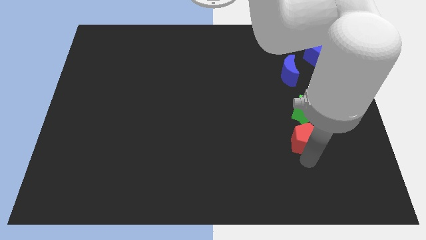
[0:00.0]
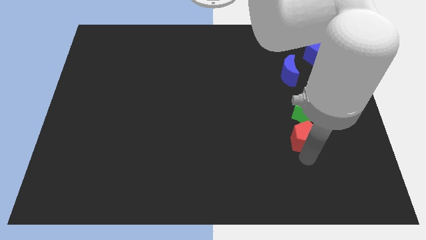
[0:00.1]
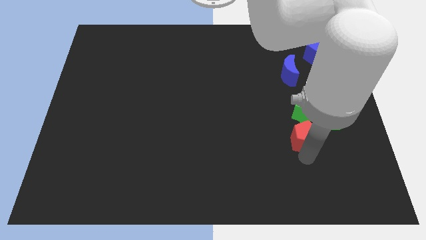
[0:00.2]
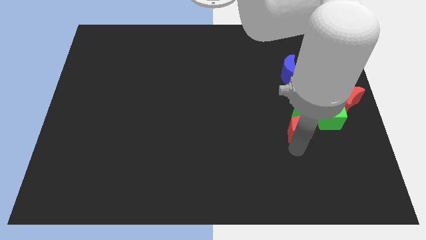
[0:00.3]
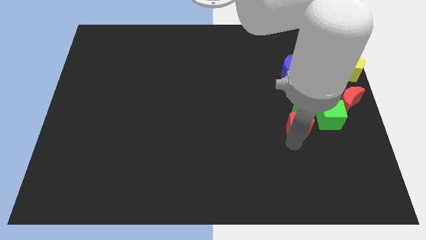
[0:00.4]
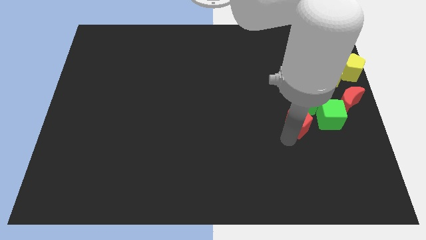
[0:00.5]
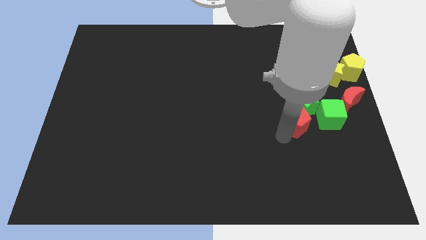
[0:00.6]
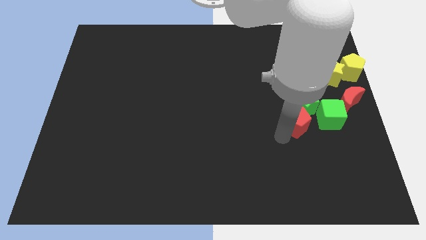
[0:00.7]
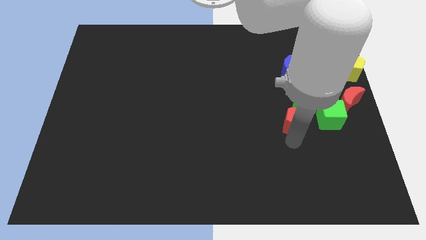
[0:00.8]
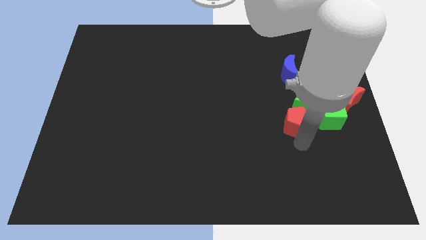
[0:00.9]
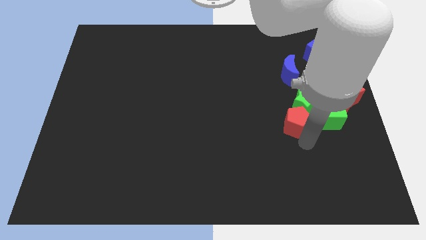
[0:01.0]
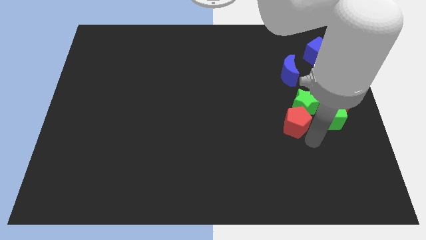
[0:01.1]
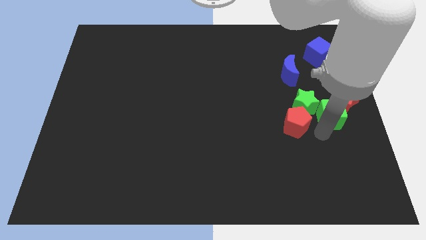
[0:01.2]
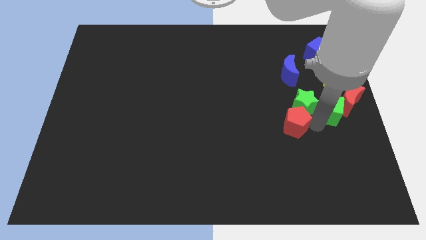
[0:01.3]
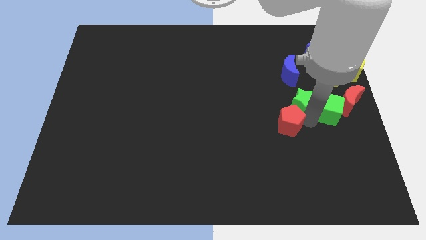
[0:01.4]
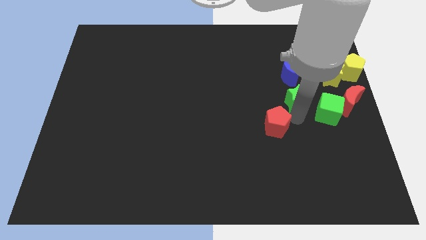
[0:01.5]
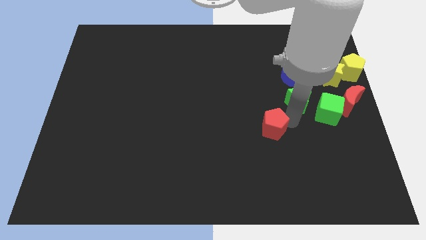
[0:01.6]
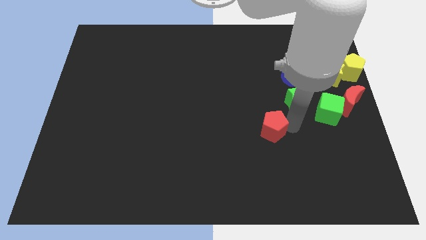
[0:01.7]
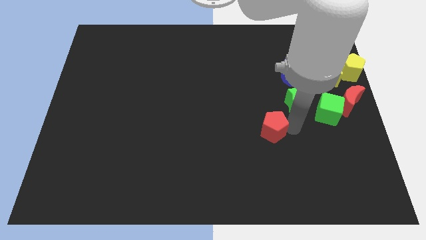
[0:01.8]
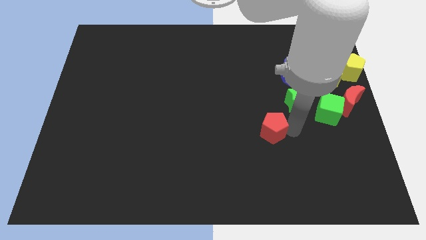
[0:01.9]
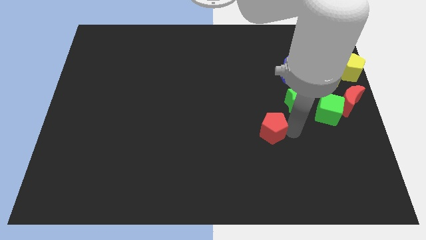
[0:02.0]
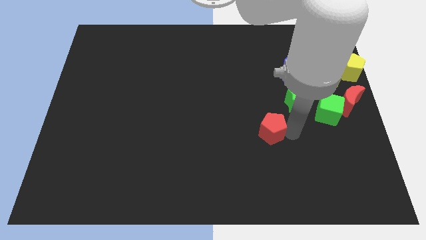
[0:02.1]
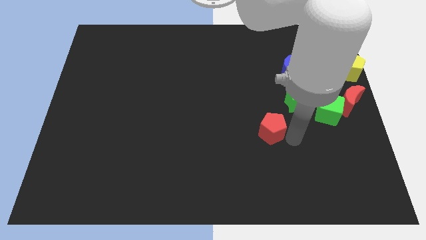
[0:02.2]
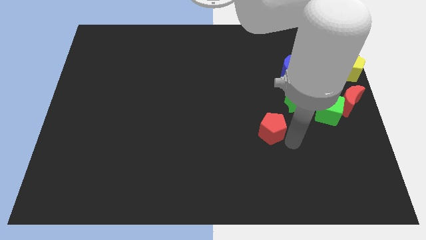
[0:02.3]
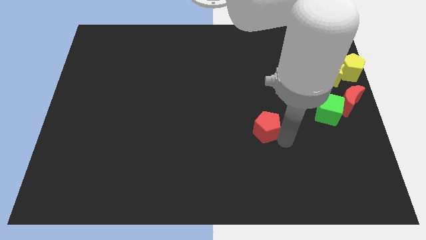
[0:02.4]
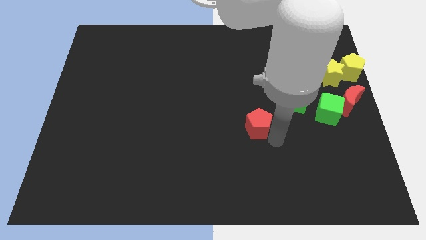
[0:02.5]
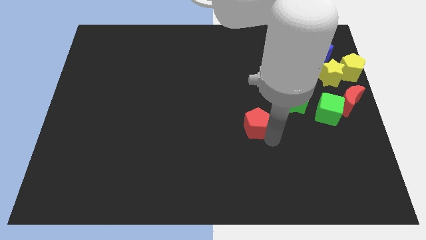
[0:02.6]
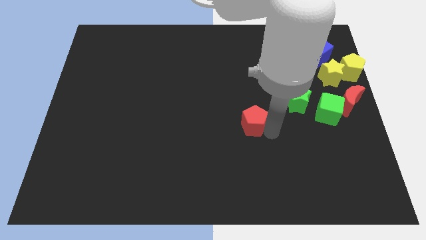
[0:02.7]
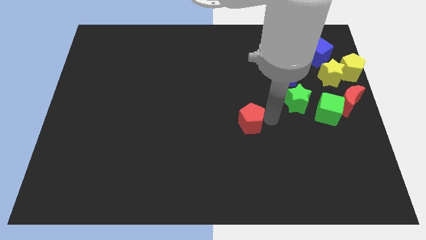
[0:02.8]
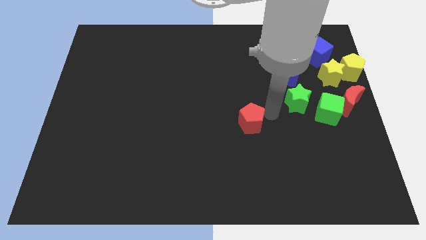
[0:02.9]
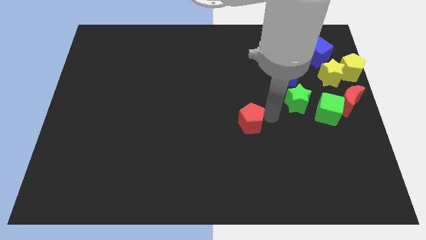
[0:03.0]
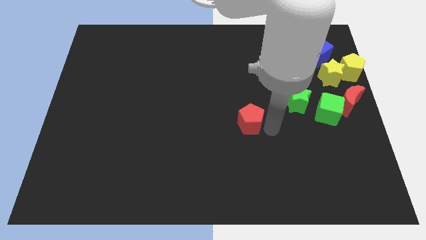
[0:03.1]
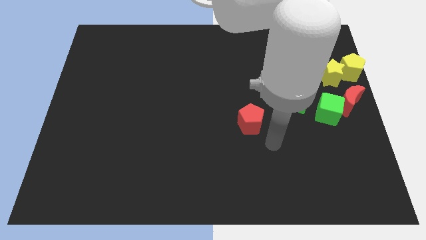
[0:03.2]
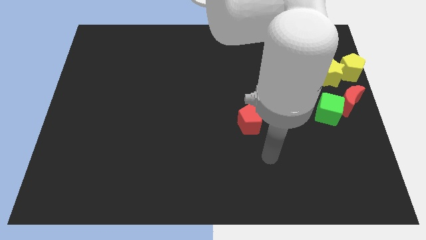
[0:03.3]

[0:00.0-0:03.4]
push red pentagon slightly towards left

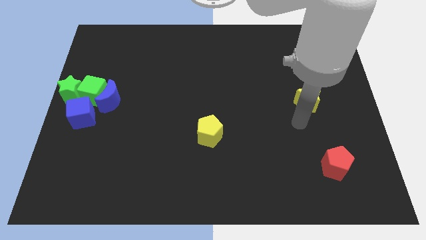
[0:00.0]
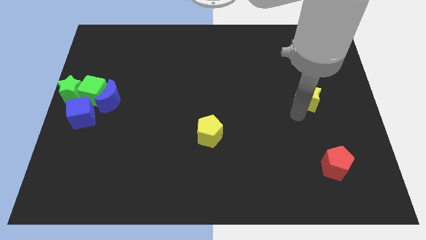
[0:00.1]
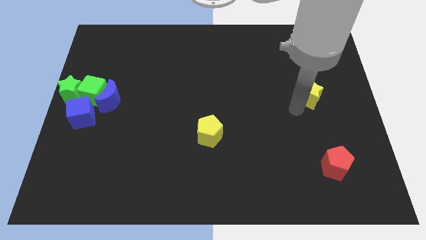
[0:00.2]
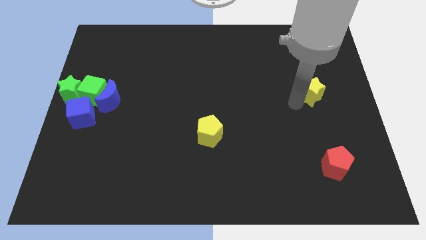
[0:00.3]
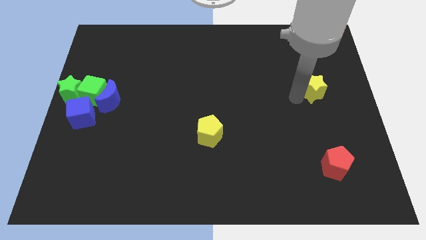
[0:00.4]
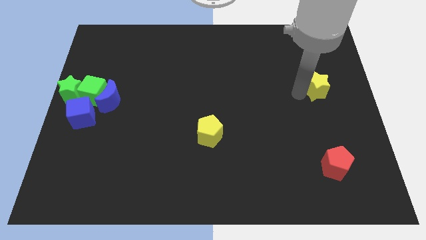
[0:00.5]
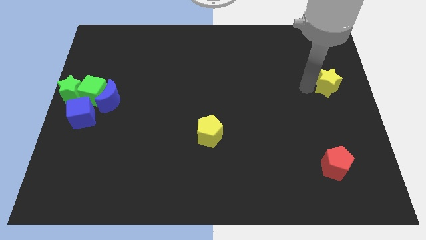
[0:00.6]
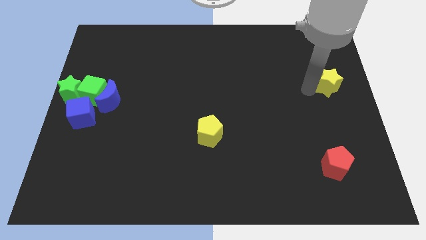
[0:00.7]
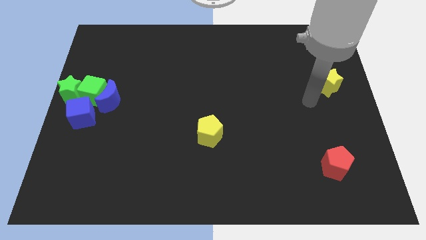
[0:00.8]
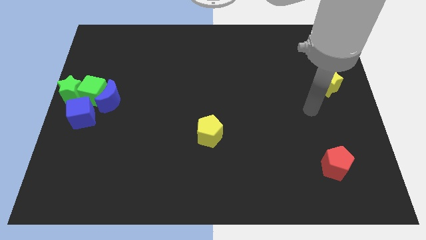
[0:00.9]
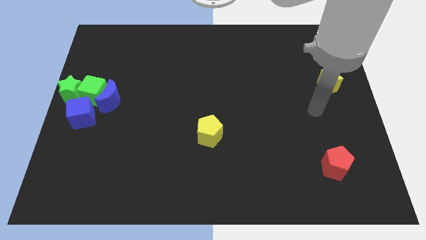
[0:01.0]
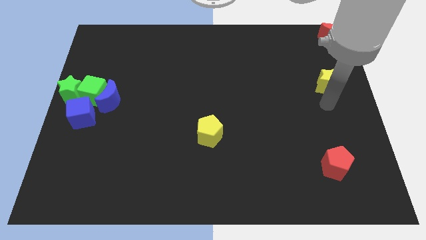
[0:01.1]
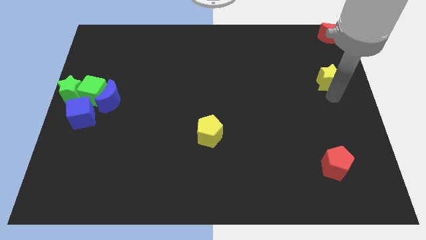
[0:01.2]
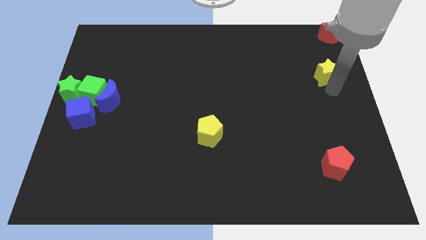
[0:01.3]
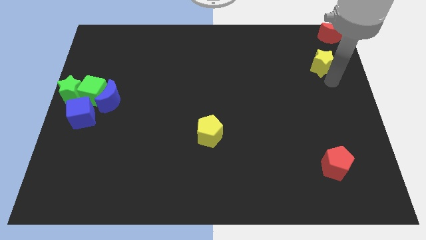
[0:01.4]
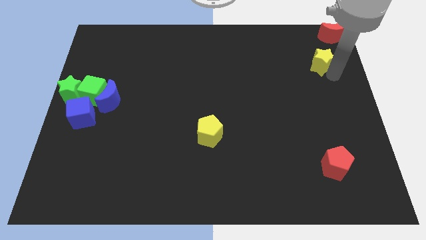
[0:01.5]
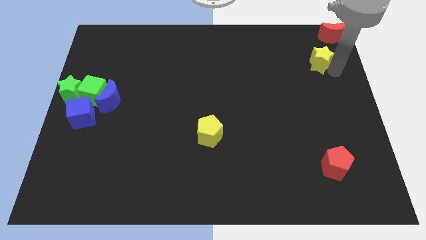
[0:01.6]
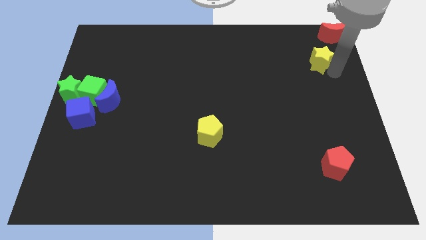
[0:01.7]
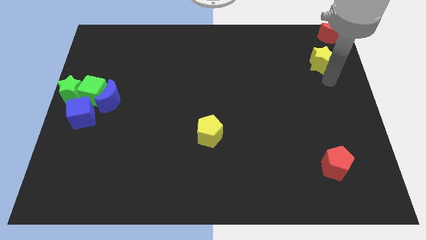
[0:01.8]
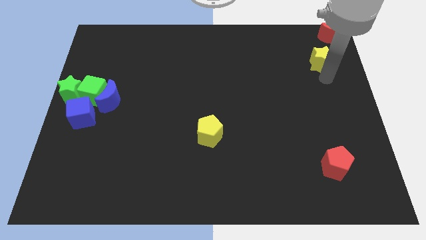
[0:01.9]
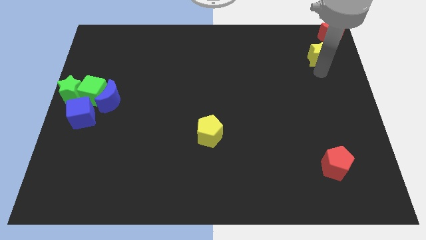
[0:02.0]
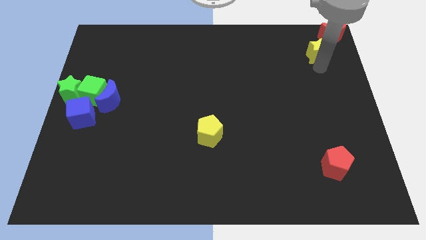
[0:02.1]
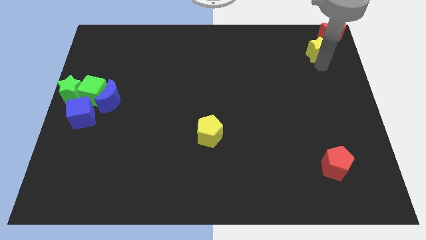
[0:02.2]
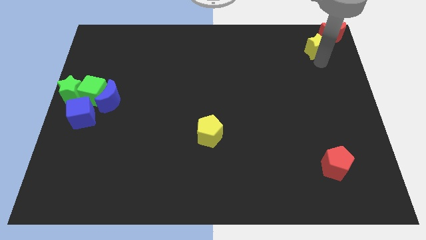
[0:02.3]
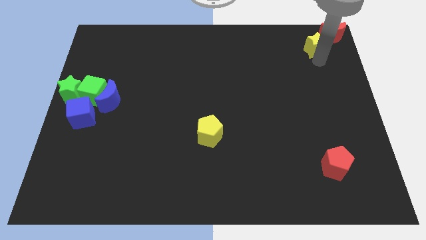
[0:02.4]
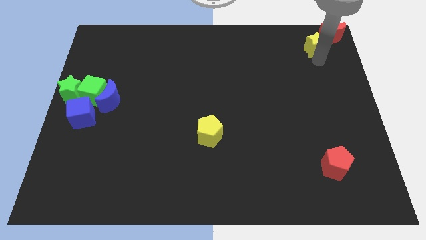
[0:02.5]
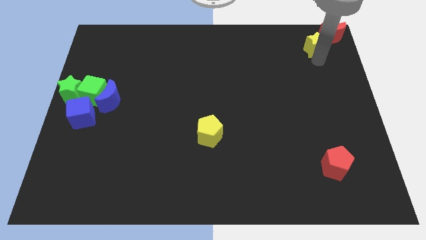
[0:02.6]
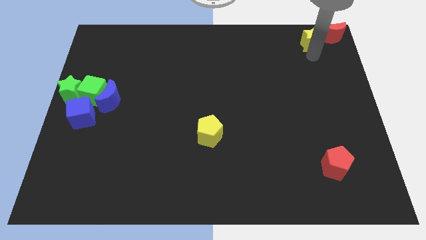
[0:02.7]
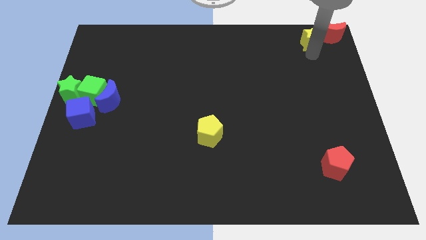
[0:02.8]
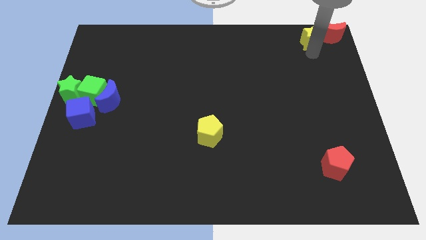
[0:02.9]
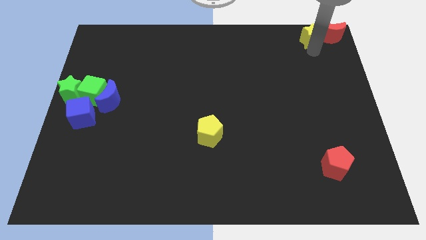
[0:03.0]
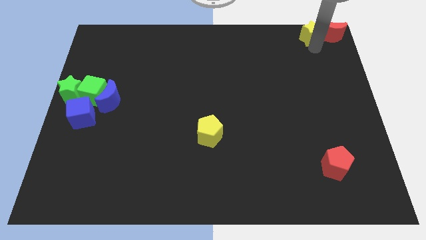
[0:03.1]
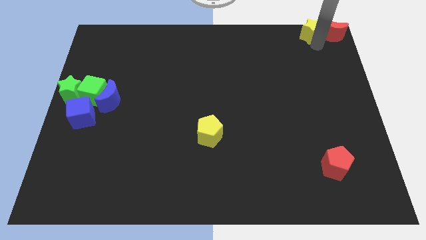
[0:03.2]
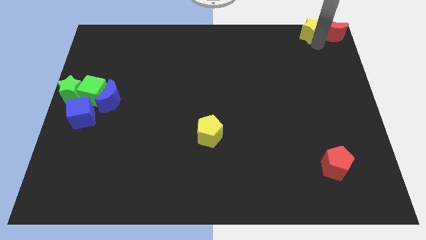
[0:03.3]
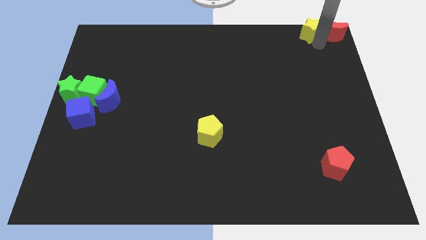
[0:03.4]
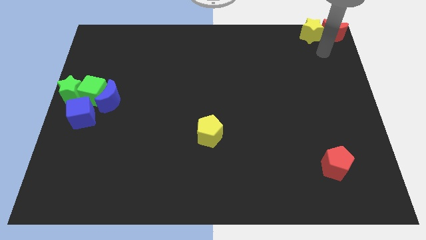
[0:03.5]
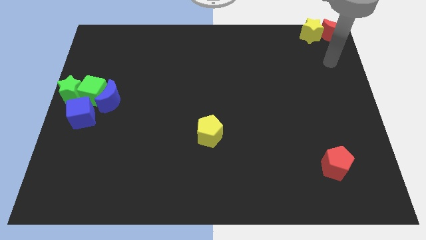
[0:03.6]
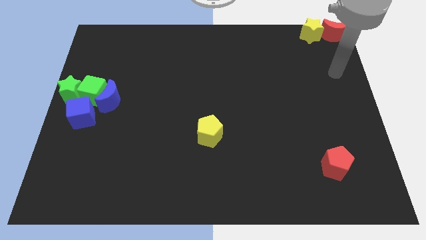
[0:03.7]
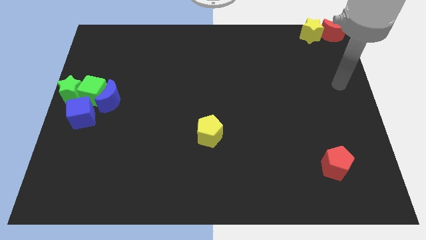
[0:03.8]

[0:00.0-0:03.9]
place yellow star left to red crescent

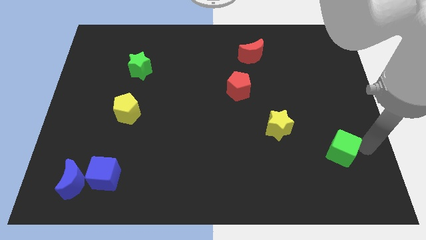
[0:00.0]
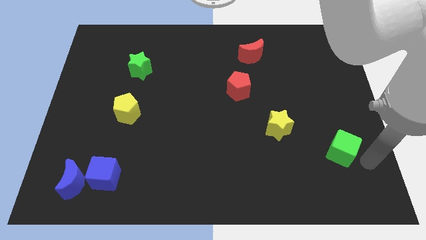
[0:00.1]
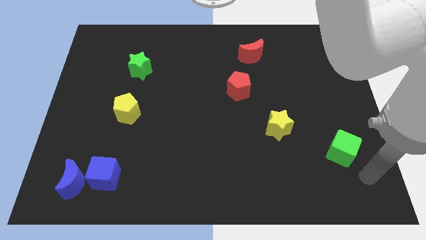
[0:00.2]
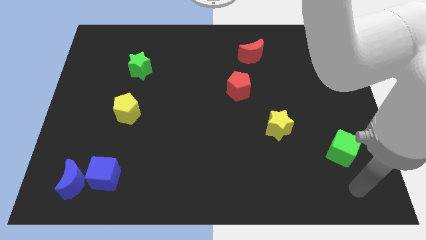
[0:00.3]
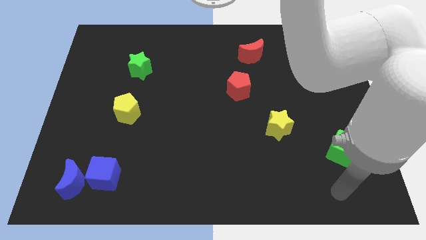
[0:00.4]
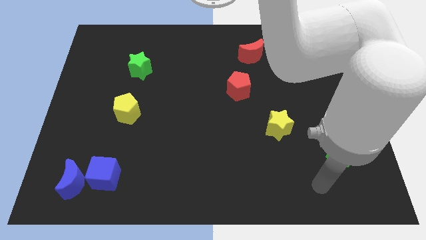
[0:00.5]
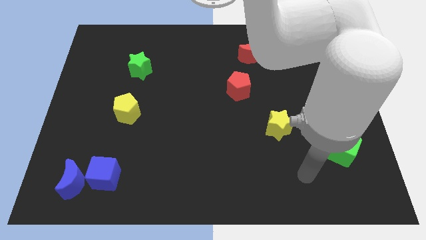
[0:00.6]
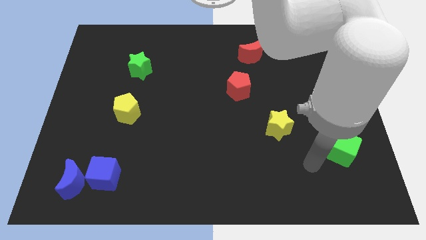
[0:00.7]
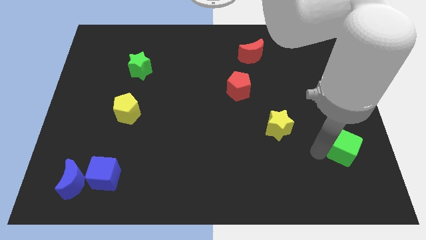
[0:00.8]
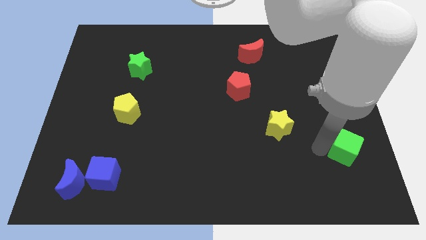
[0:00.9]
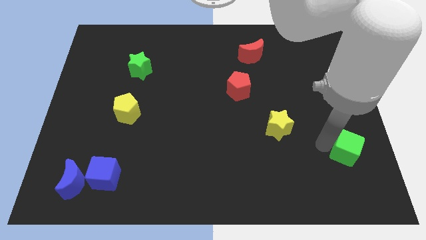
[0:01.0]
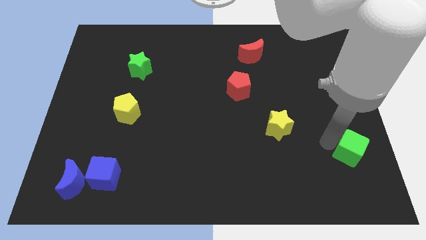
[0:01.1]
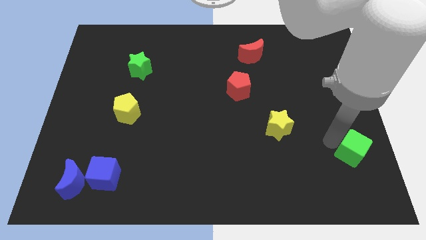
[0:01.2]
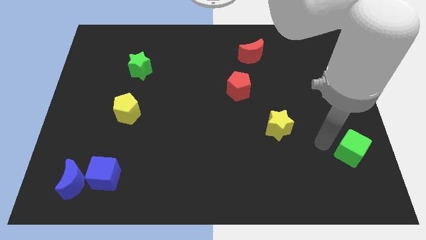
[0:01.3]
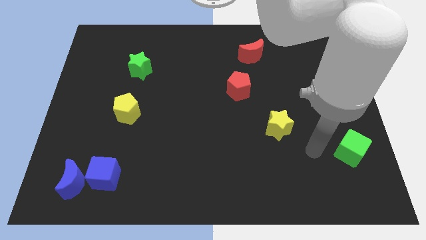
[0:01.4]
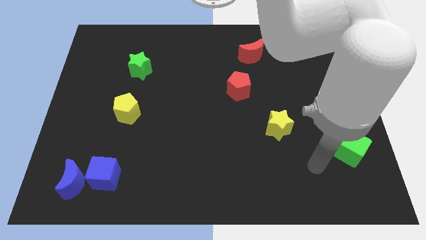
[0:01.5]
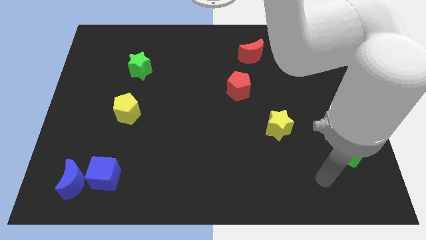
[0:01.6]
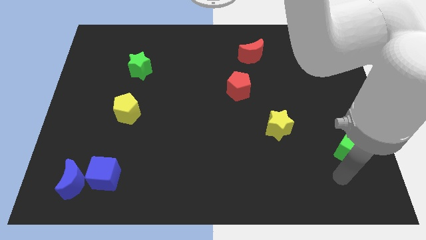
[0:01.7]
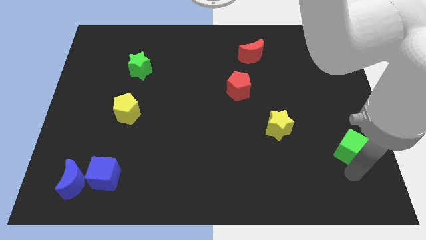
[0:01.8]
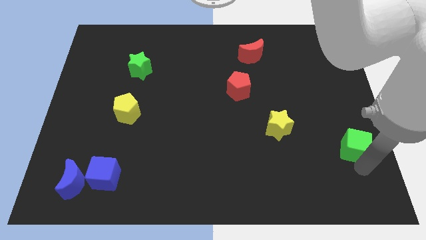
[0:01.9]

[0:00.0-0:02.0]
touch the green cube
